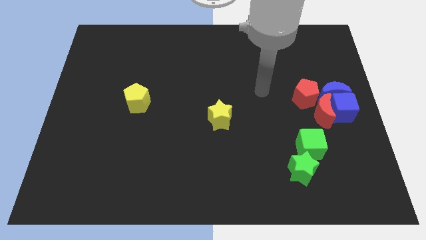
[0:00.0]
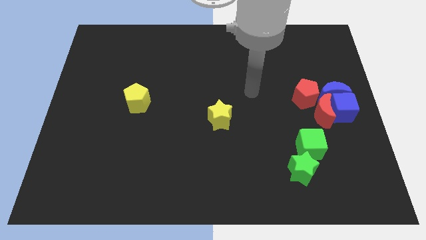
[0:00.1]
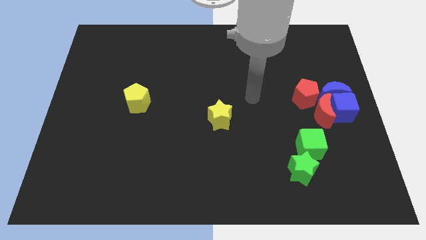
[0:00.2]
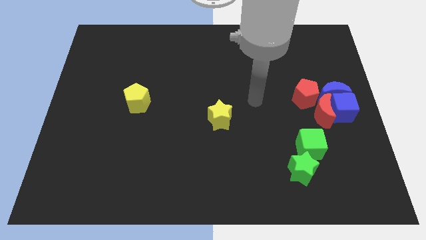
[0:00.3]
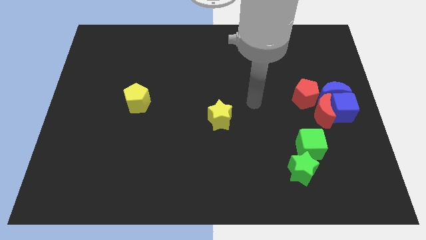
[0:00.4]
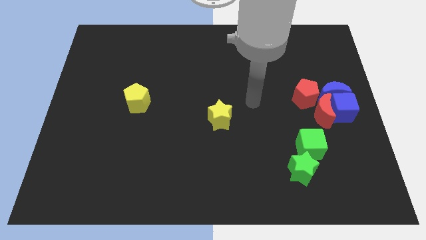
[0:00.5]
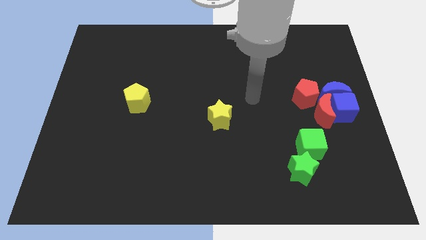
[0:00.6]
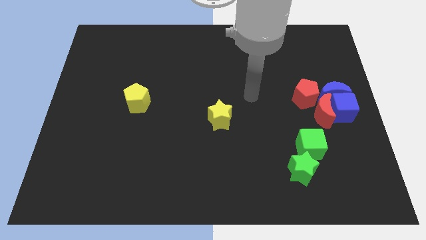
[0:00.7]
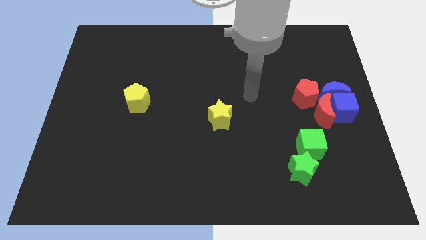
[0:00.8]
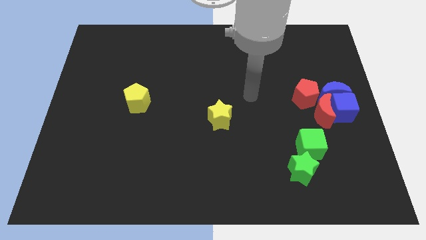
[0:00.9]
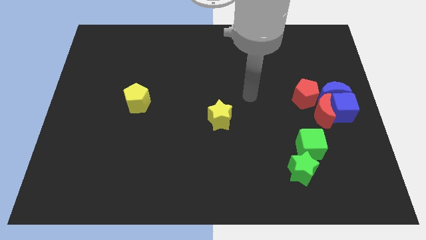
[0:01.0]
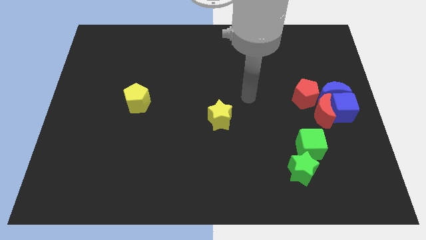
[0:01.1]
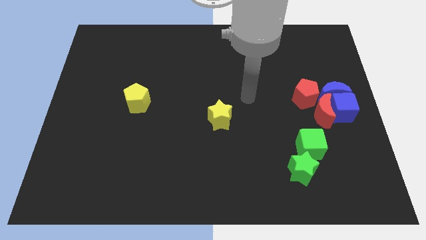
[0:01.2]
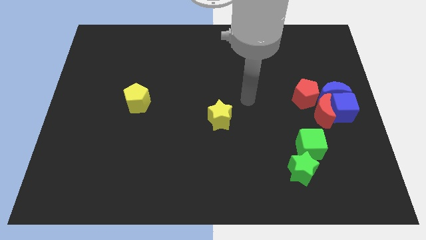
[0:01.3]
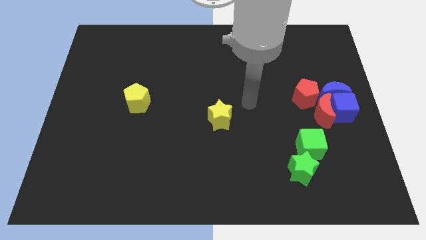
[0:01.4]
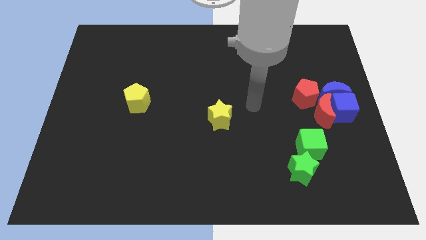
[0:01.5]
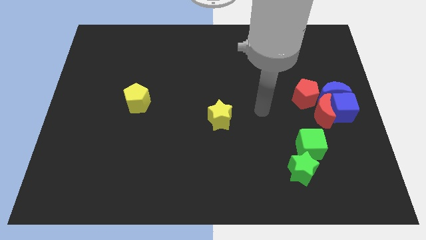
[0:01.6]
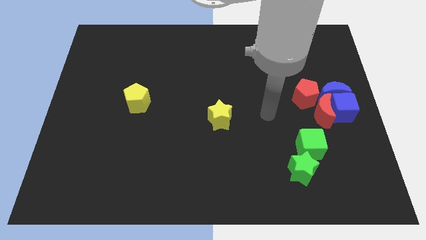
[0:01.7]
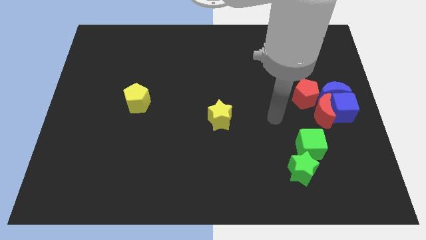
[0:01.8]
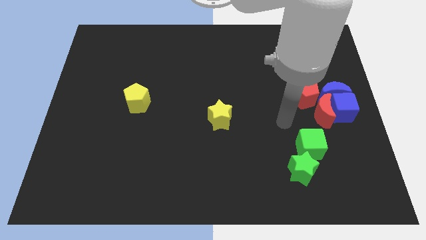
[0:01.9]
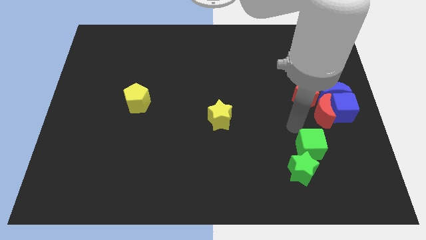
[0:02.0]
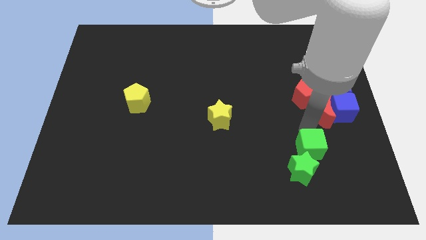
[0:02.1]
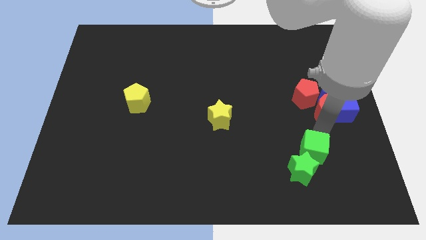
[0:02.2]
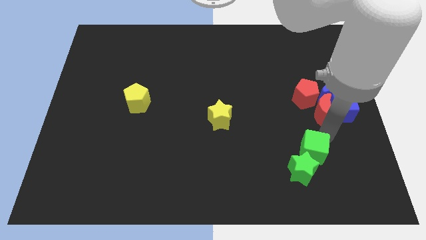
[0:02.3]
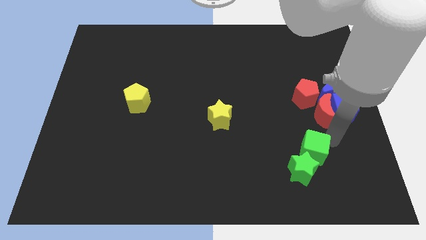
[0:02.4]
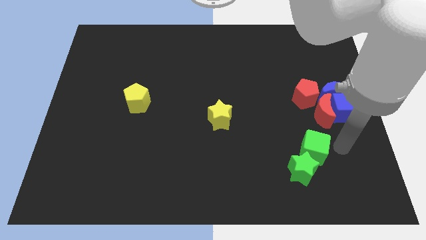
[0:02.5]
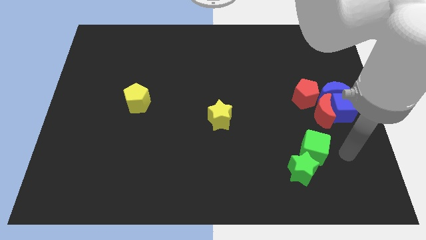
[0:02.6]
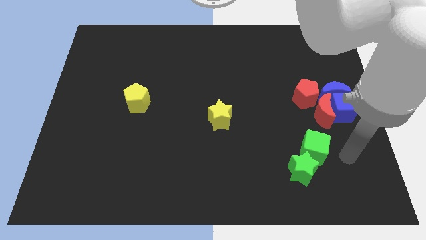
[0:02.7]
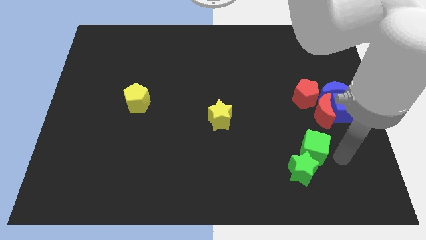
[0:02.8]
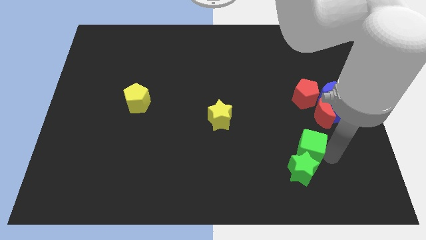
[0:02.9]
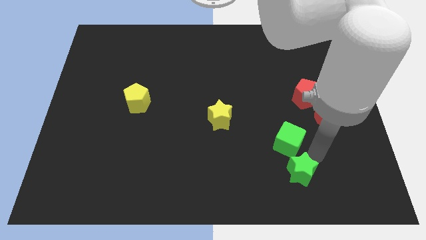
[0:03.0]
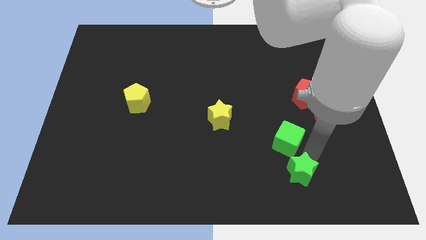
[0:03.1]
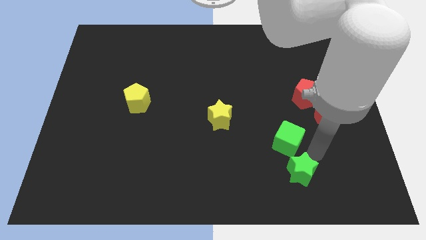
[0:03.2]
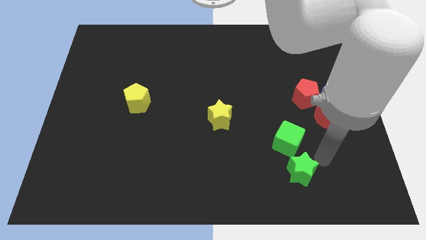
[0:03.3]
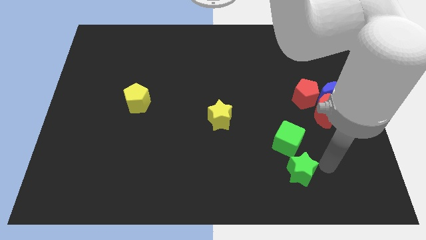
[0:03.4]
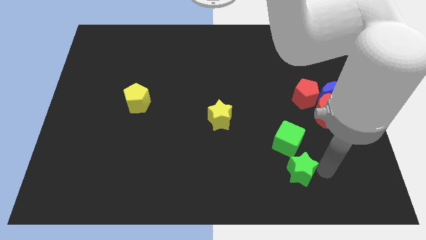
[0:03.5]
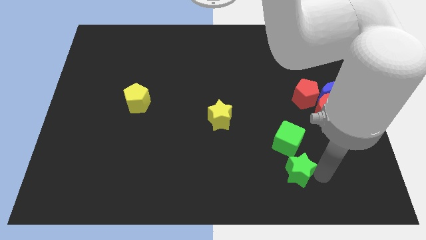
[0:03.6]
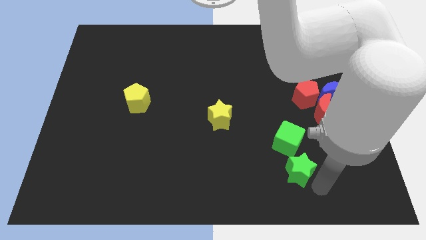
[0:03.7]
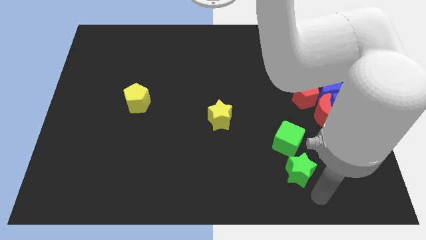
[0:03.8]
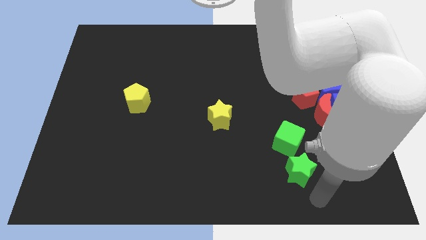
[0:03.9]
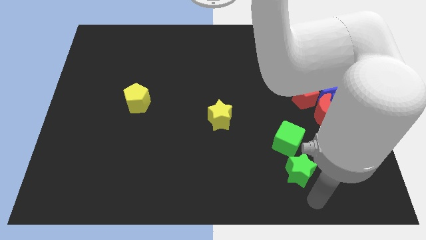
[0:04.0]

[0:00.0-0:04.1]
slightly move the green cube towards the left side of the board

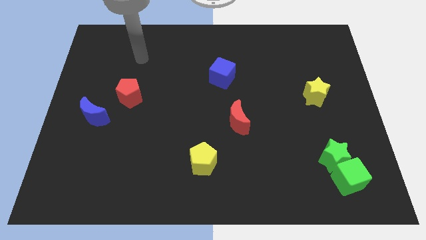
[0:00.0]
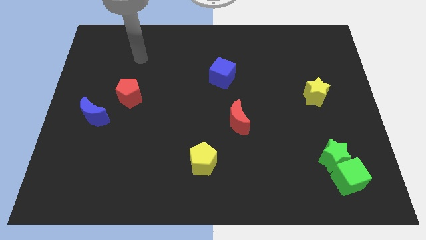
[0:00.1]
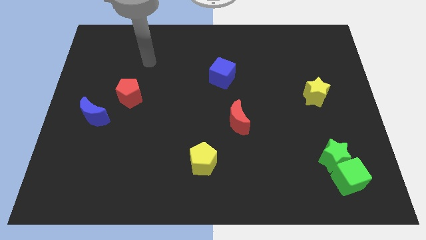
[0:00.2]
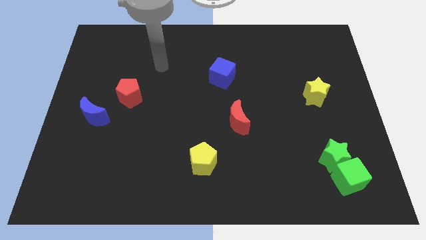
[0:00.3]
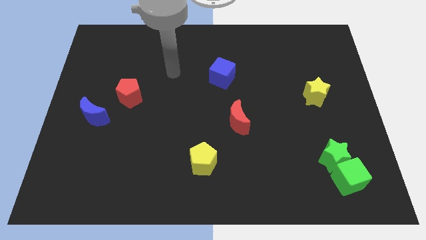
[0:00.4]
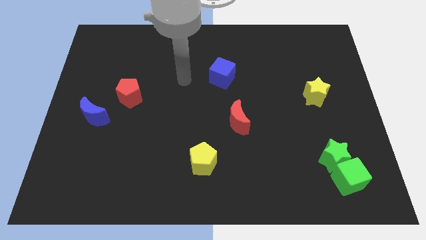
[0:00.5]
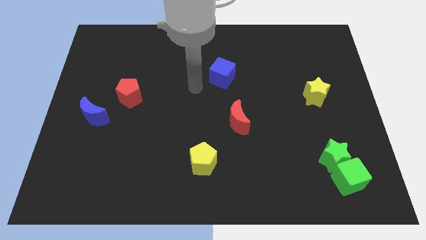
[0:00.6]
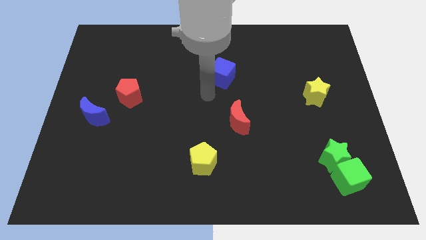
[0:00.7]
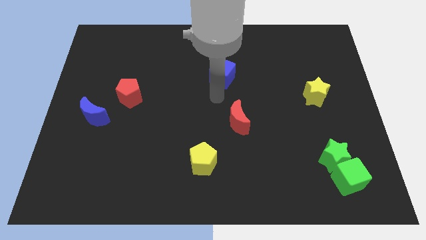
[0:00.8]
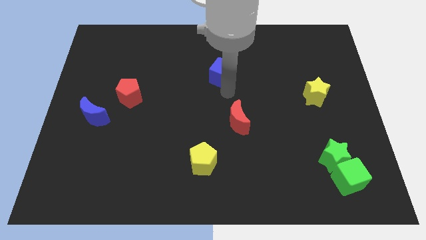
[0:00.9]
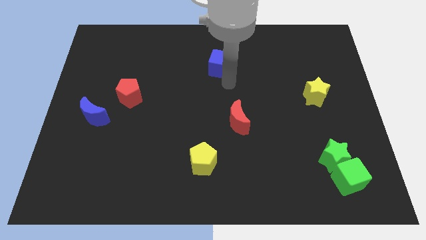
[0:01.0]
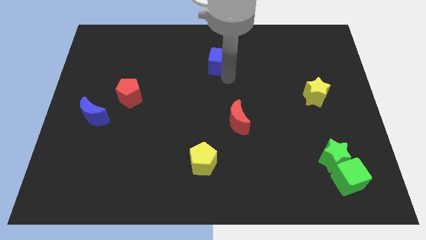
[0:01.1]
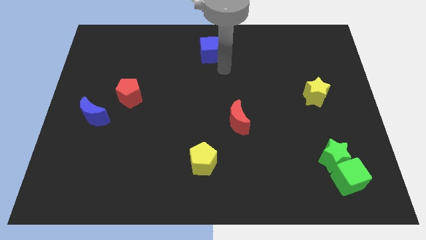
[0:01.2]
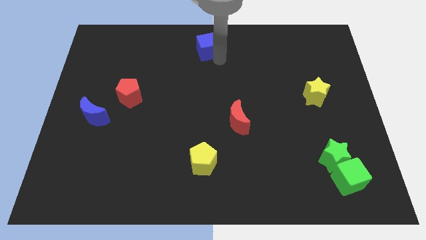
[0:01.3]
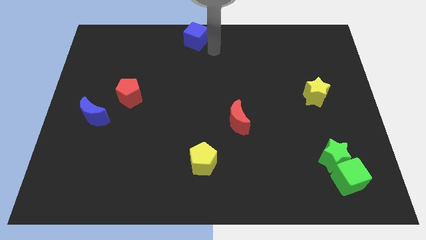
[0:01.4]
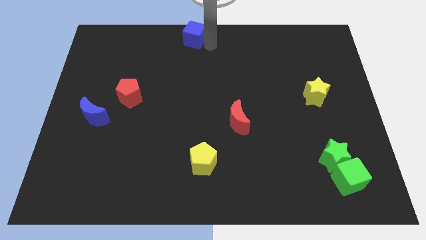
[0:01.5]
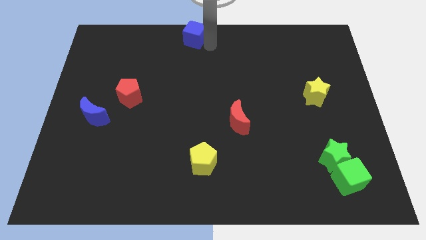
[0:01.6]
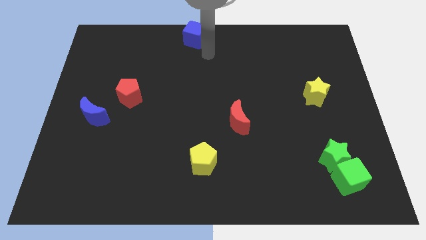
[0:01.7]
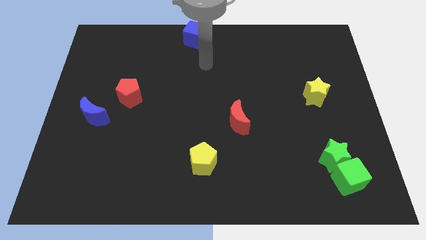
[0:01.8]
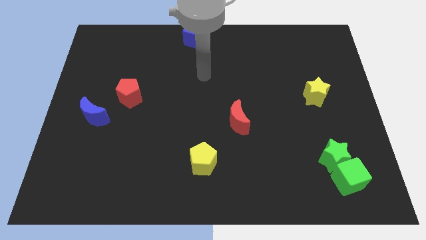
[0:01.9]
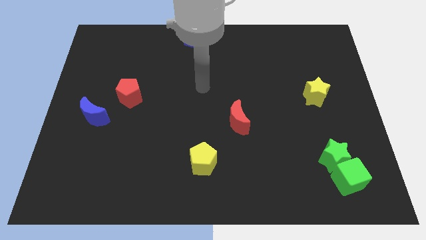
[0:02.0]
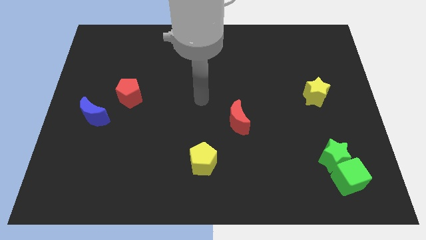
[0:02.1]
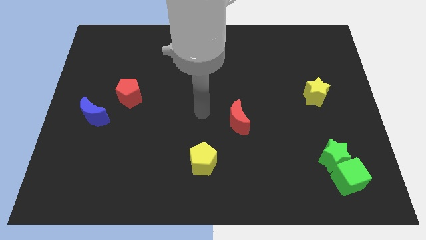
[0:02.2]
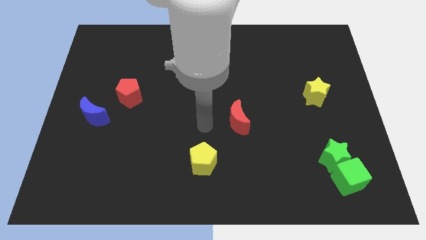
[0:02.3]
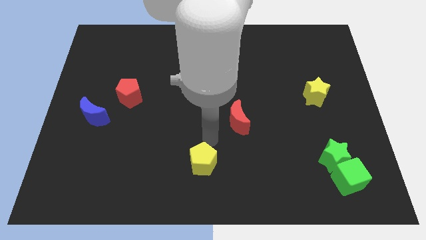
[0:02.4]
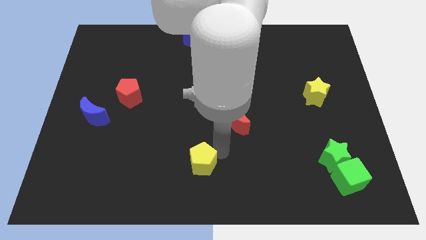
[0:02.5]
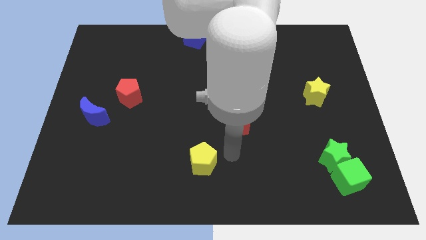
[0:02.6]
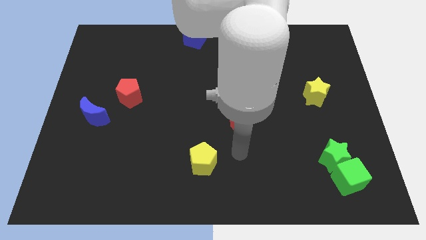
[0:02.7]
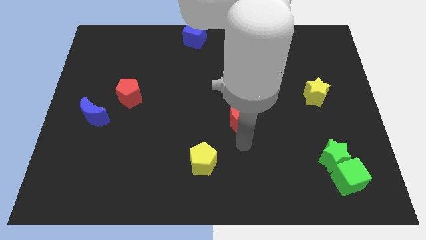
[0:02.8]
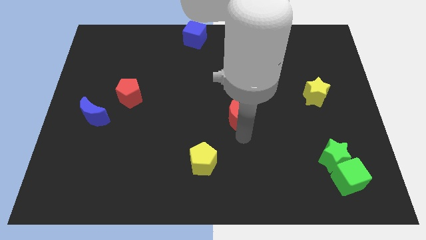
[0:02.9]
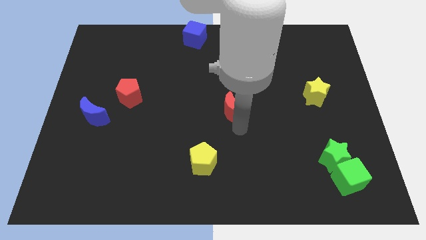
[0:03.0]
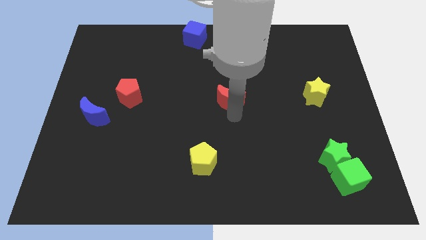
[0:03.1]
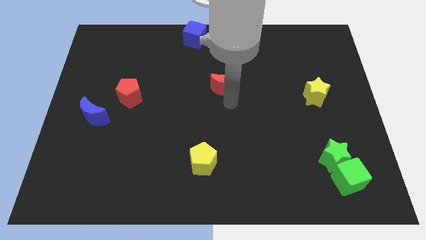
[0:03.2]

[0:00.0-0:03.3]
move the blue cube and red crescent diagonal to each other

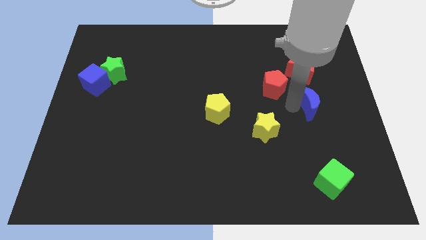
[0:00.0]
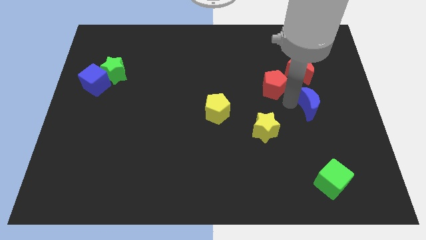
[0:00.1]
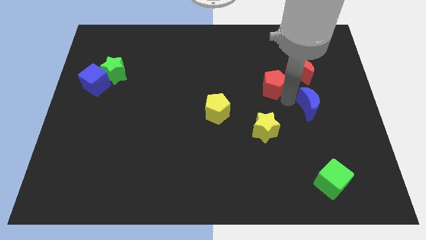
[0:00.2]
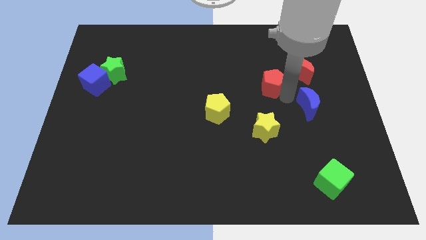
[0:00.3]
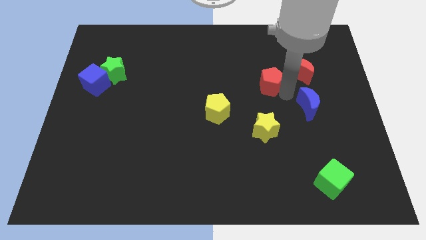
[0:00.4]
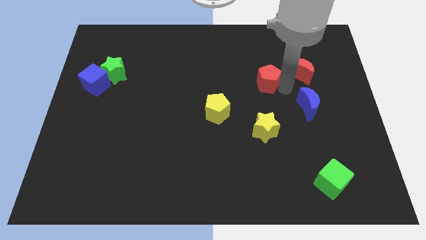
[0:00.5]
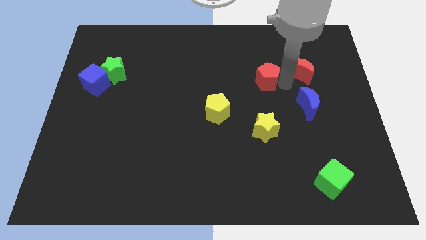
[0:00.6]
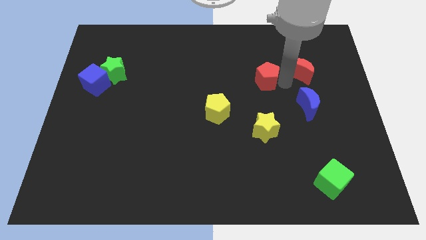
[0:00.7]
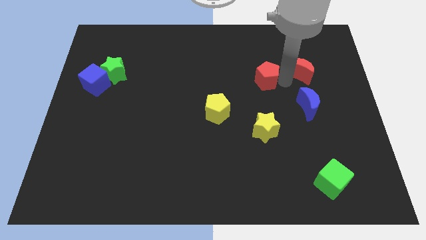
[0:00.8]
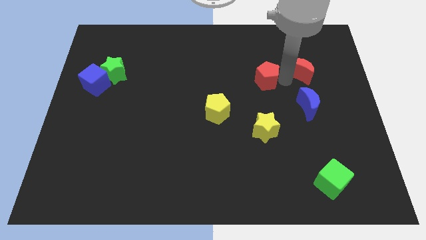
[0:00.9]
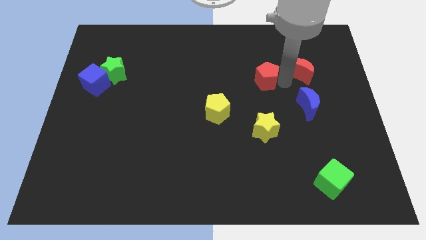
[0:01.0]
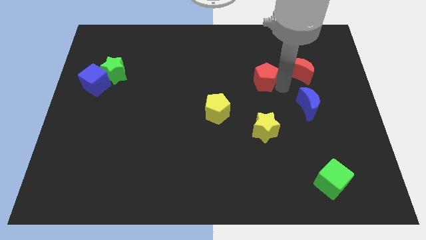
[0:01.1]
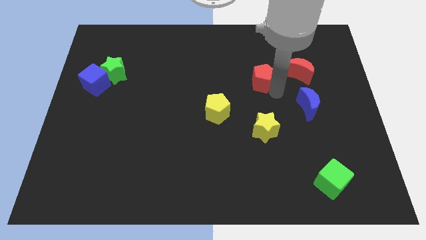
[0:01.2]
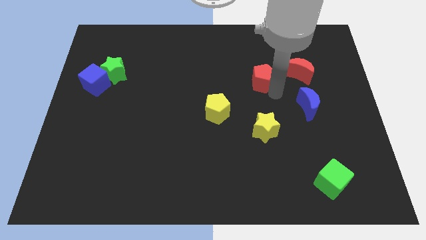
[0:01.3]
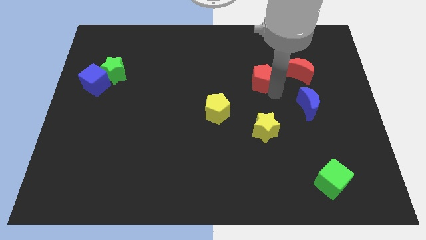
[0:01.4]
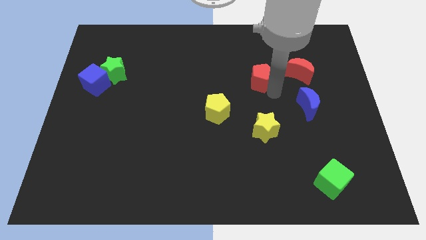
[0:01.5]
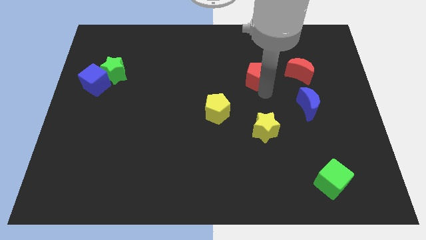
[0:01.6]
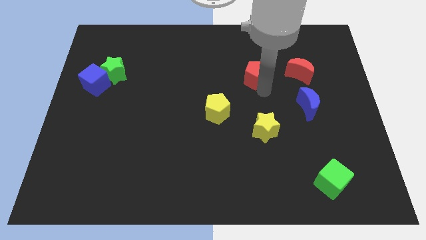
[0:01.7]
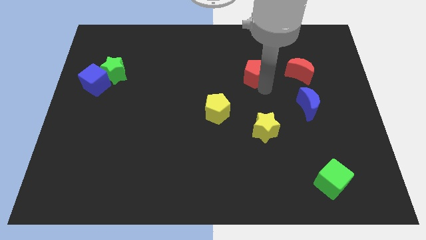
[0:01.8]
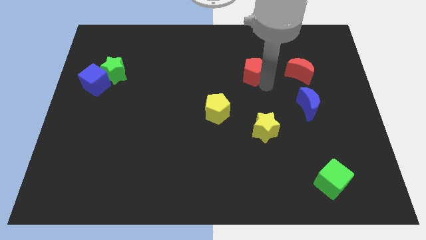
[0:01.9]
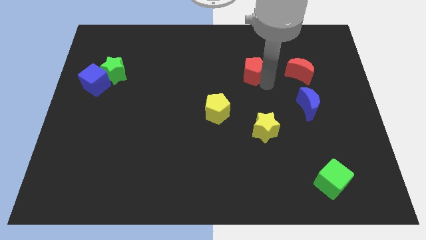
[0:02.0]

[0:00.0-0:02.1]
separate red pentagon from red moon
